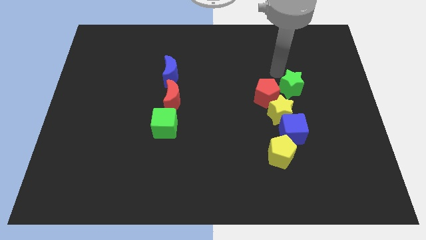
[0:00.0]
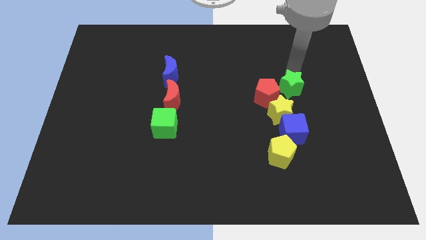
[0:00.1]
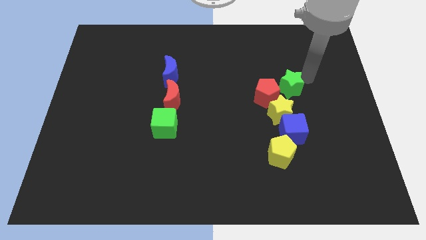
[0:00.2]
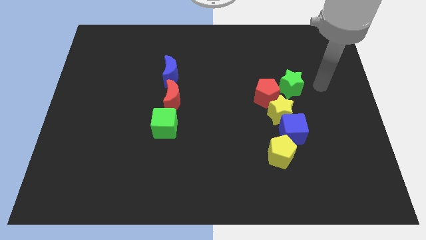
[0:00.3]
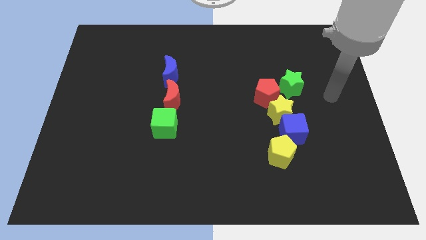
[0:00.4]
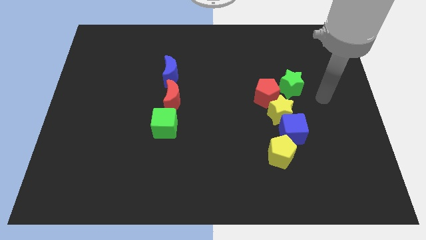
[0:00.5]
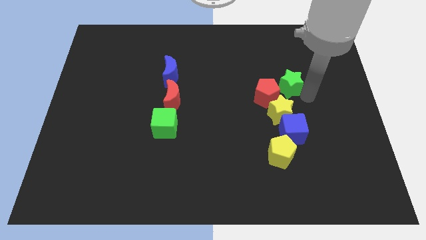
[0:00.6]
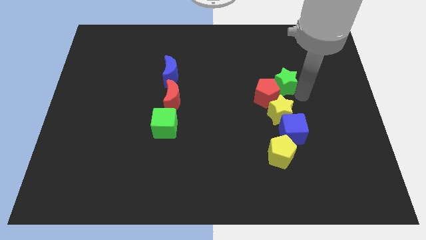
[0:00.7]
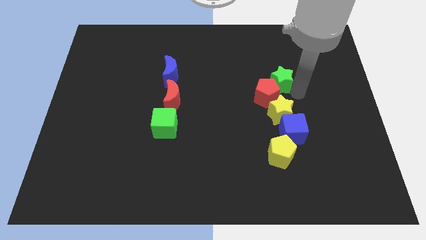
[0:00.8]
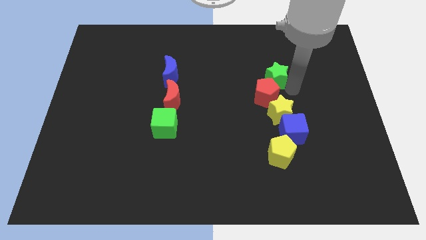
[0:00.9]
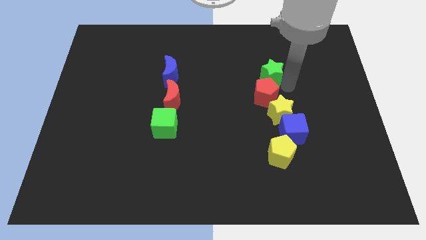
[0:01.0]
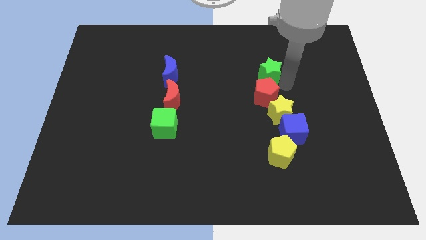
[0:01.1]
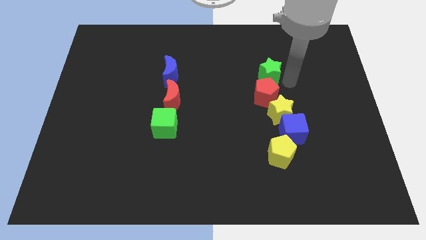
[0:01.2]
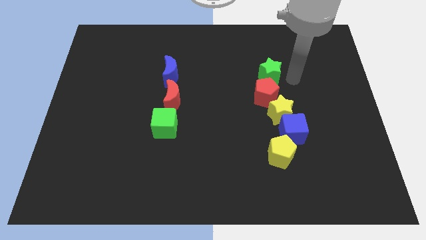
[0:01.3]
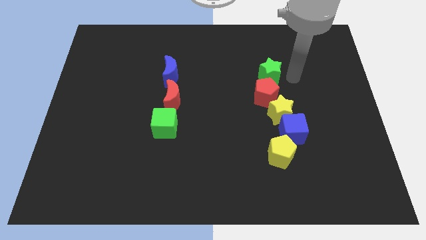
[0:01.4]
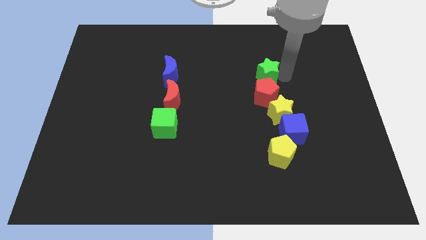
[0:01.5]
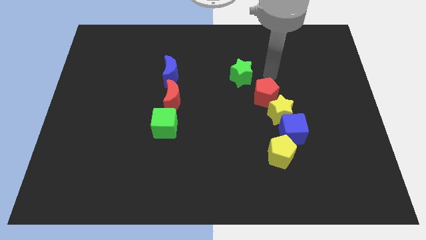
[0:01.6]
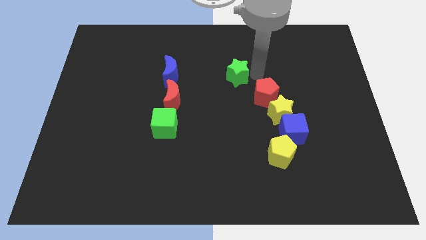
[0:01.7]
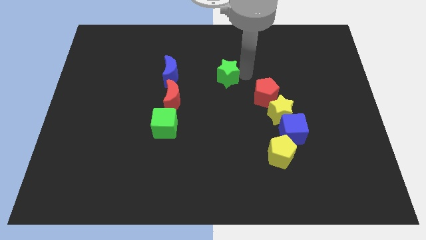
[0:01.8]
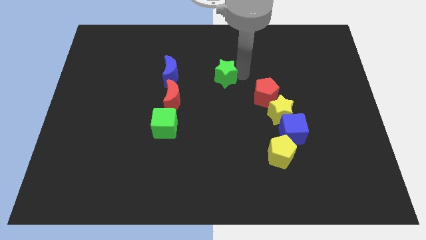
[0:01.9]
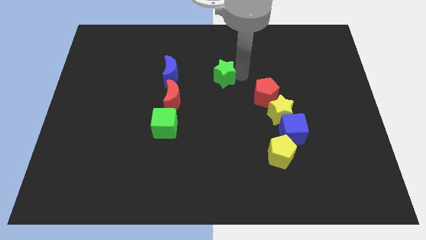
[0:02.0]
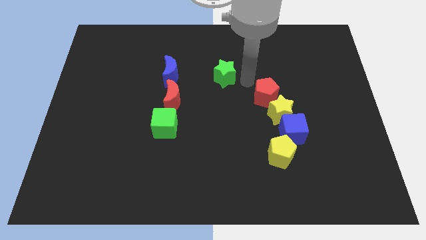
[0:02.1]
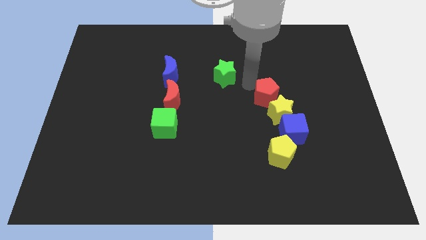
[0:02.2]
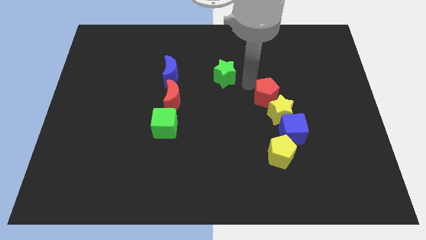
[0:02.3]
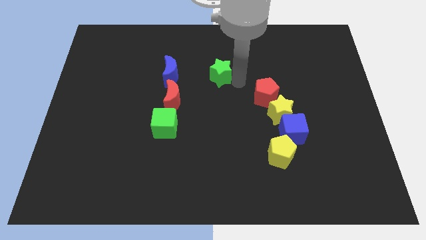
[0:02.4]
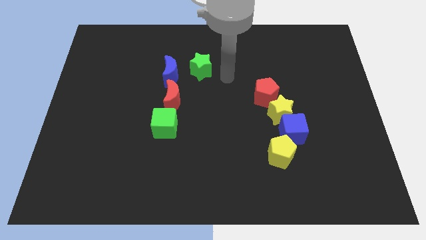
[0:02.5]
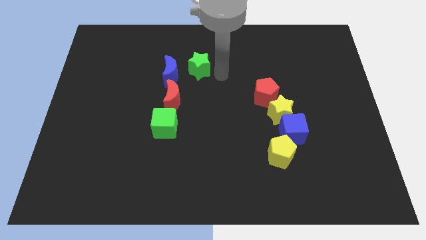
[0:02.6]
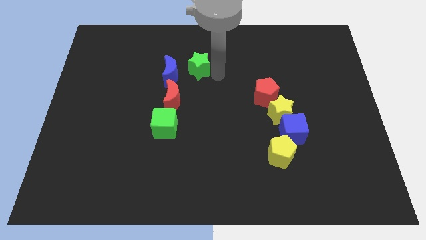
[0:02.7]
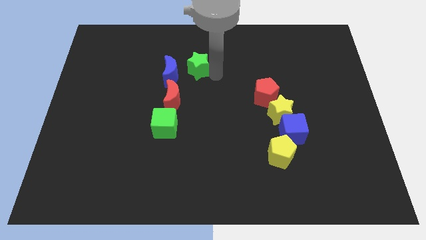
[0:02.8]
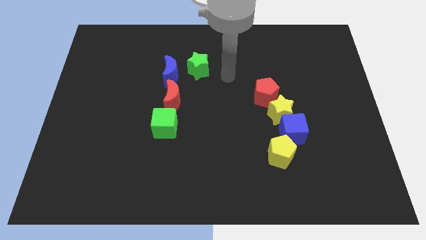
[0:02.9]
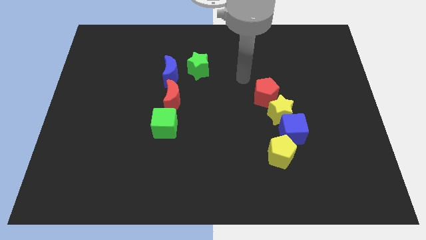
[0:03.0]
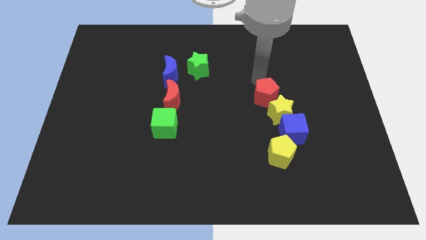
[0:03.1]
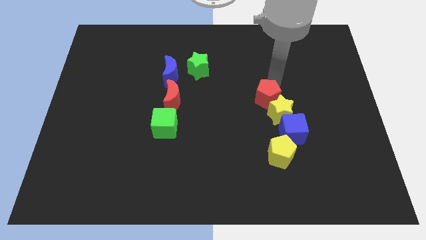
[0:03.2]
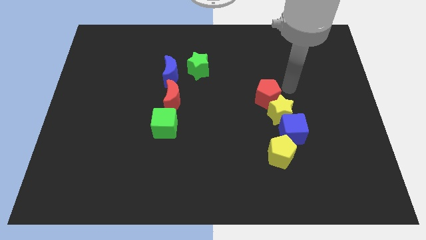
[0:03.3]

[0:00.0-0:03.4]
push the green star to the right side of the blue crescent

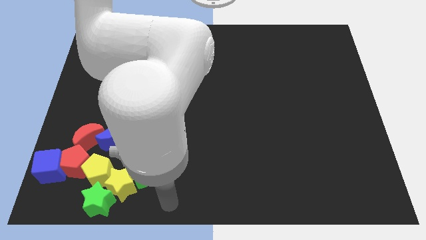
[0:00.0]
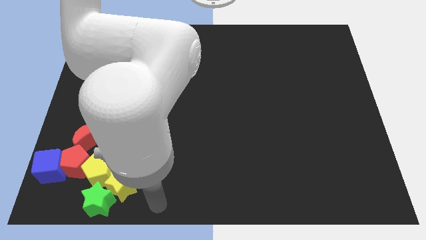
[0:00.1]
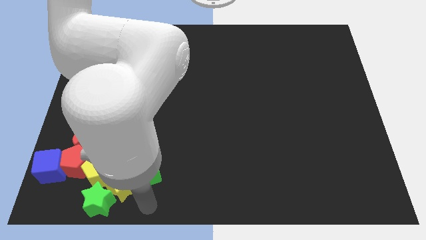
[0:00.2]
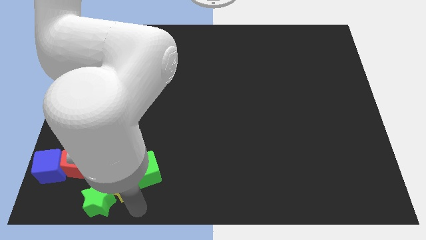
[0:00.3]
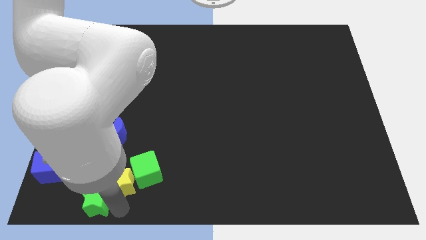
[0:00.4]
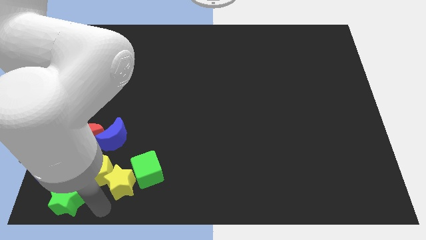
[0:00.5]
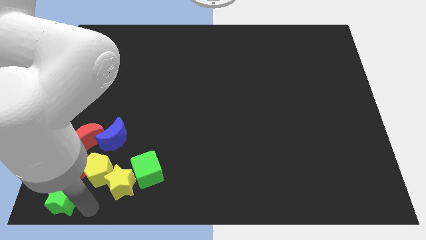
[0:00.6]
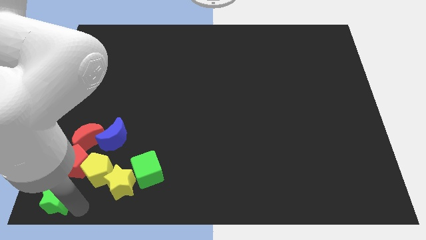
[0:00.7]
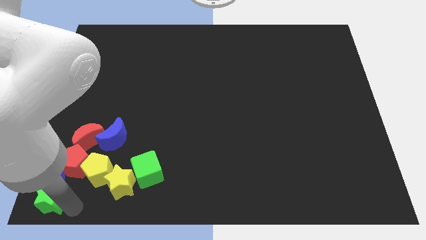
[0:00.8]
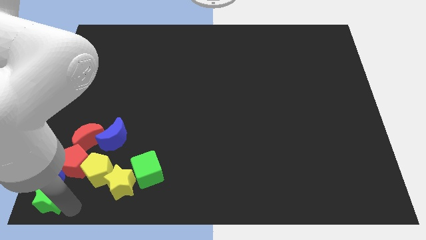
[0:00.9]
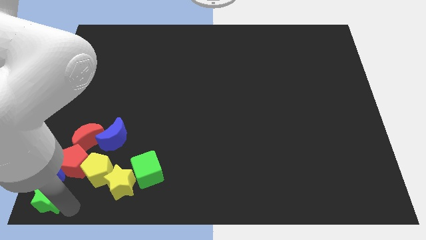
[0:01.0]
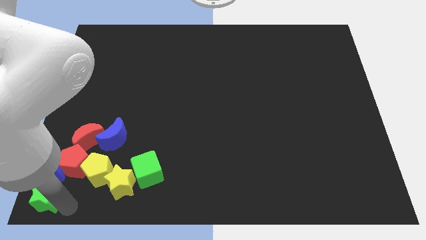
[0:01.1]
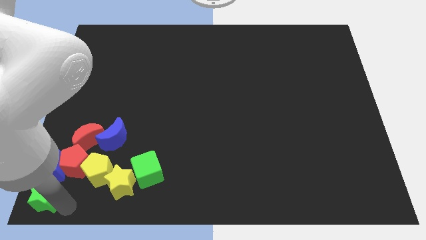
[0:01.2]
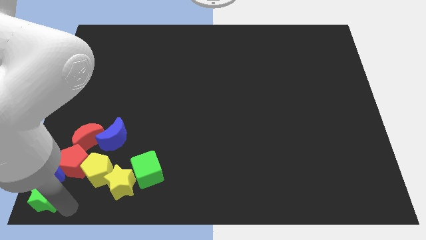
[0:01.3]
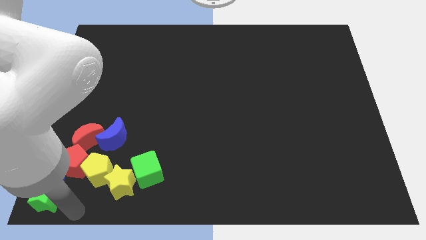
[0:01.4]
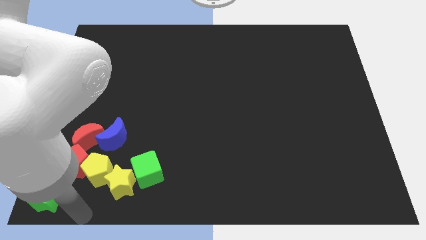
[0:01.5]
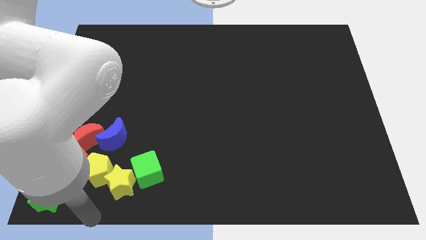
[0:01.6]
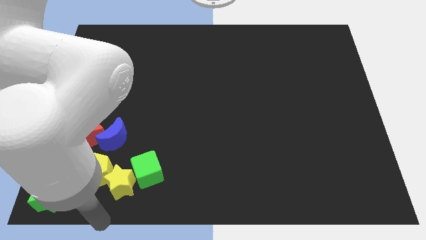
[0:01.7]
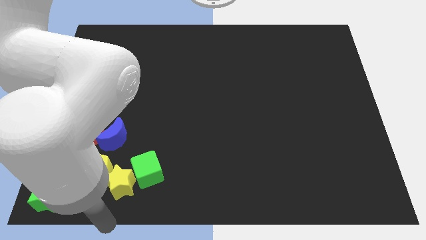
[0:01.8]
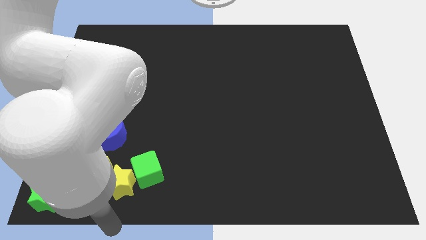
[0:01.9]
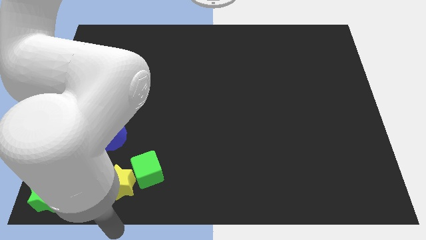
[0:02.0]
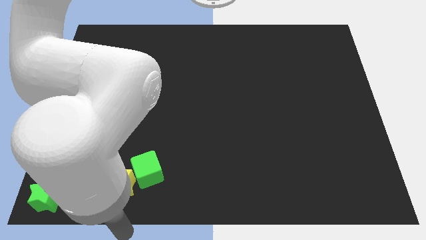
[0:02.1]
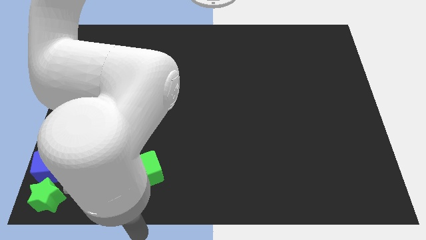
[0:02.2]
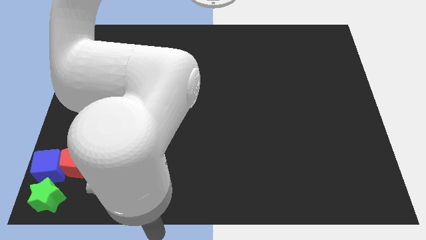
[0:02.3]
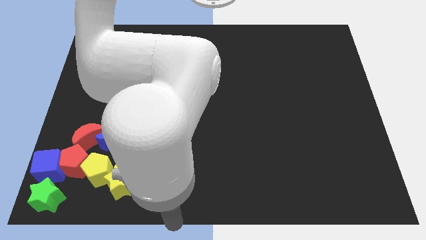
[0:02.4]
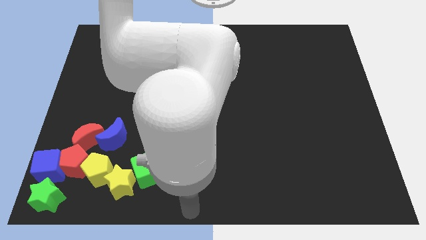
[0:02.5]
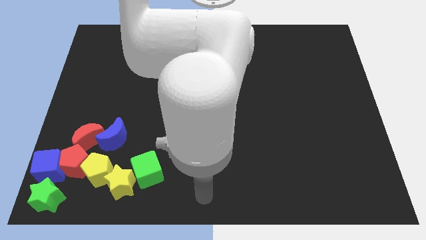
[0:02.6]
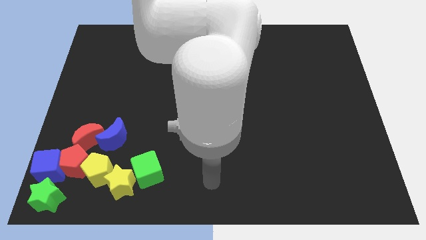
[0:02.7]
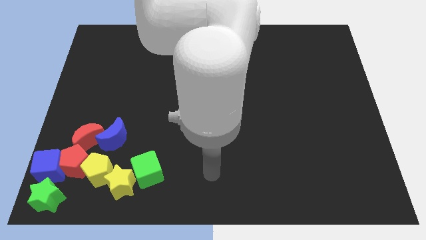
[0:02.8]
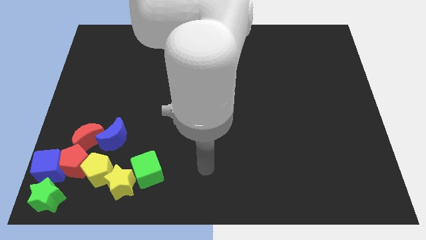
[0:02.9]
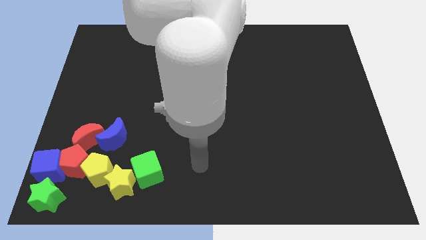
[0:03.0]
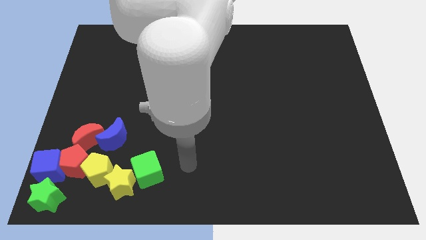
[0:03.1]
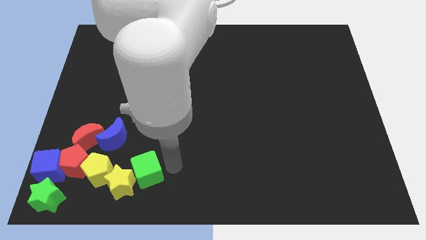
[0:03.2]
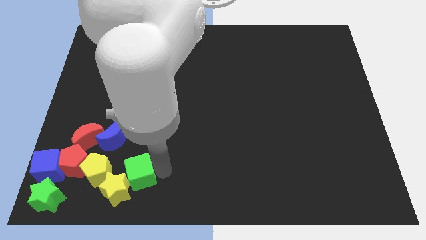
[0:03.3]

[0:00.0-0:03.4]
push the green star to the bottom left of the board

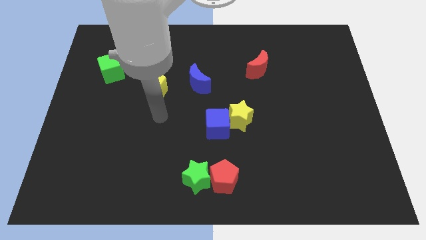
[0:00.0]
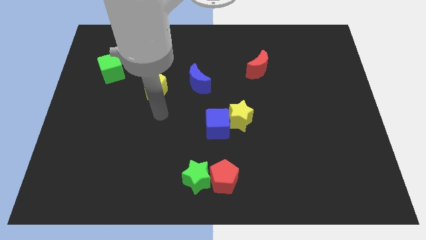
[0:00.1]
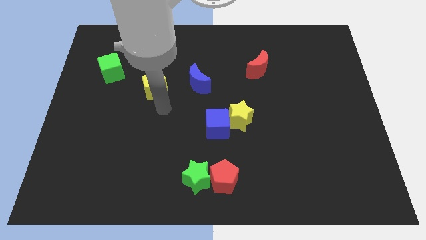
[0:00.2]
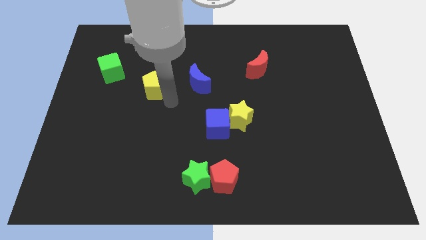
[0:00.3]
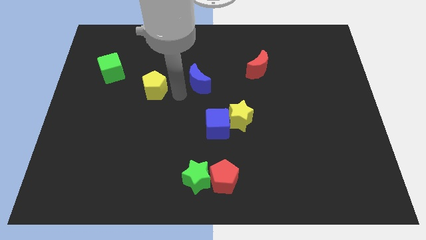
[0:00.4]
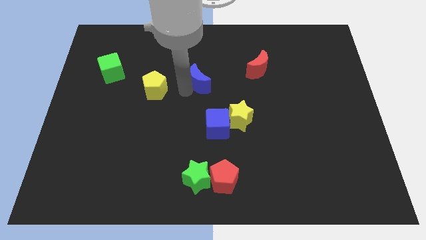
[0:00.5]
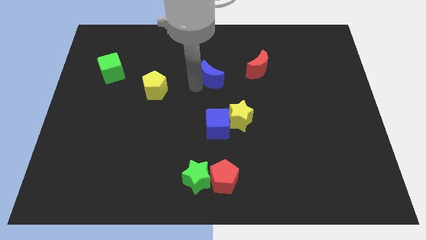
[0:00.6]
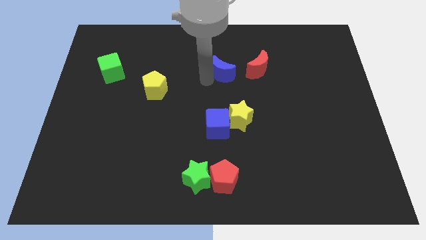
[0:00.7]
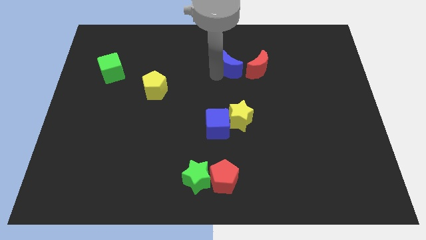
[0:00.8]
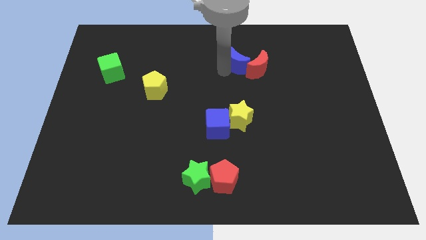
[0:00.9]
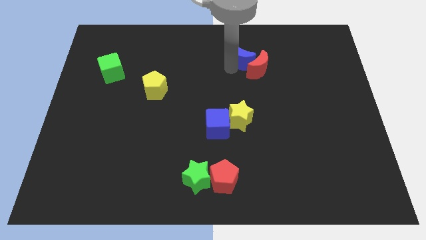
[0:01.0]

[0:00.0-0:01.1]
move the blue crescent close to the red crescent

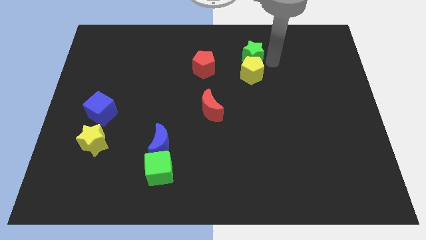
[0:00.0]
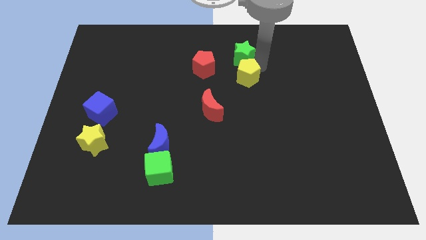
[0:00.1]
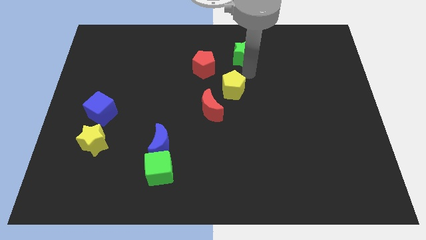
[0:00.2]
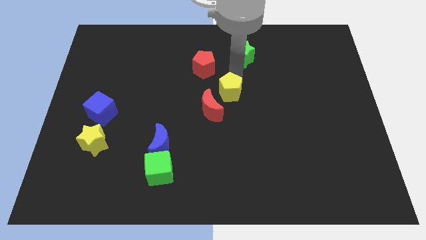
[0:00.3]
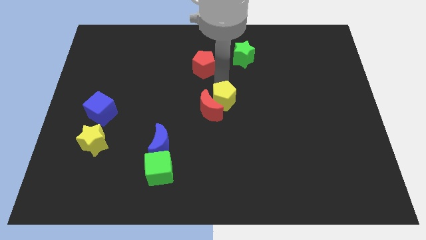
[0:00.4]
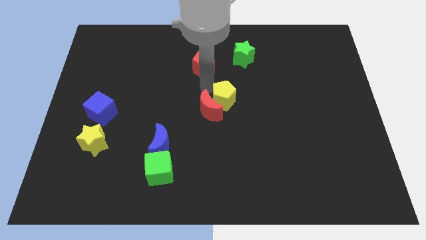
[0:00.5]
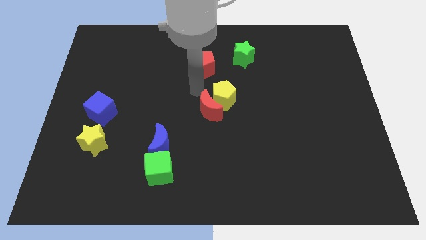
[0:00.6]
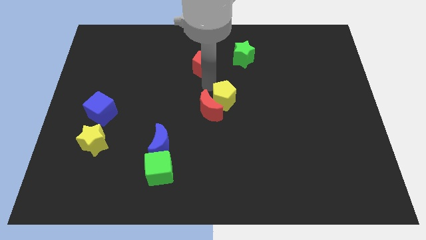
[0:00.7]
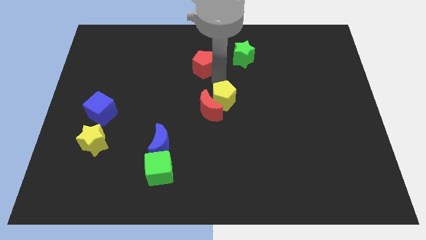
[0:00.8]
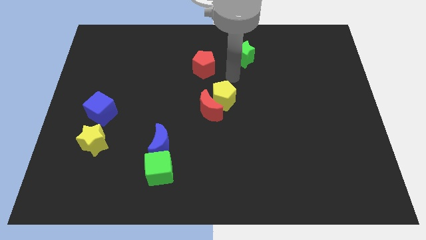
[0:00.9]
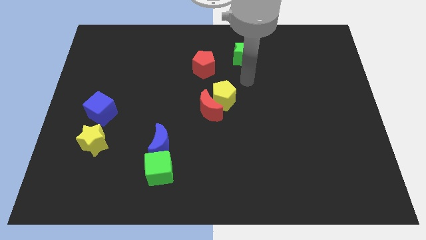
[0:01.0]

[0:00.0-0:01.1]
push the yellow pentagon into red moon
